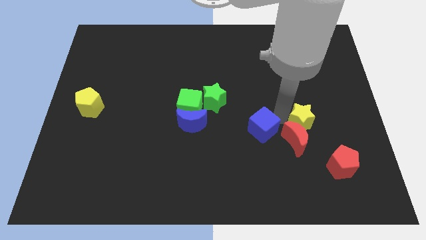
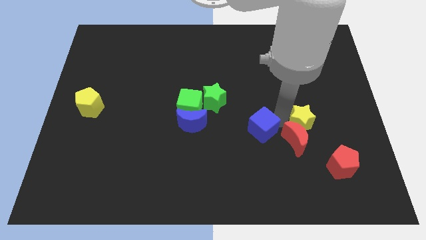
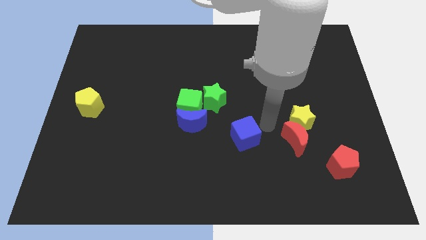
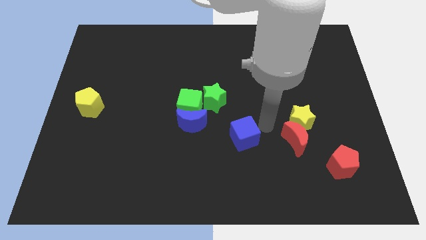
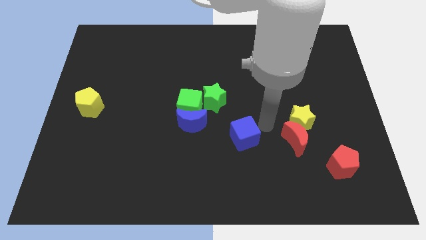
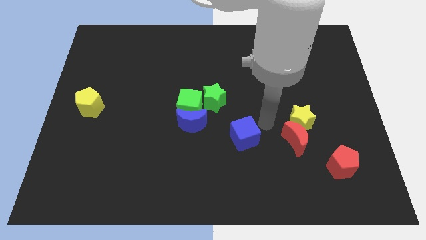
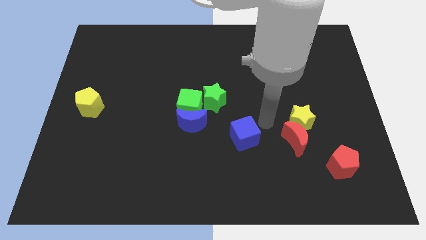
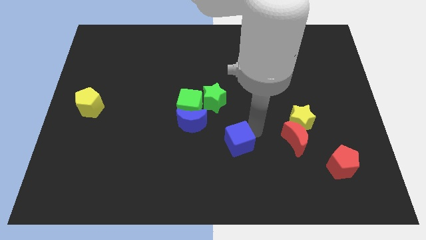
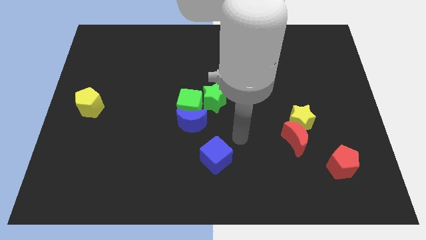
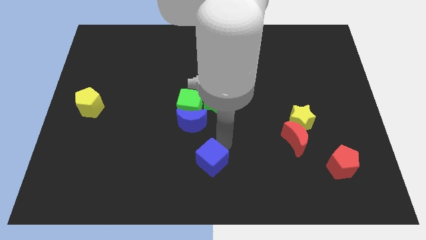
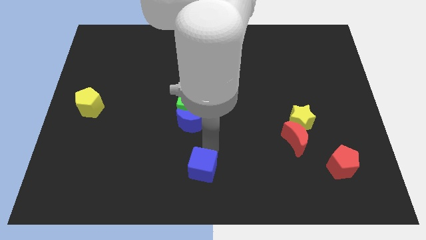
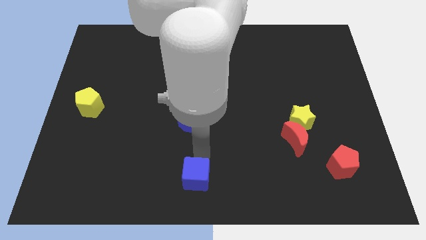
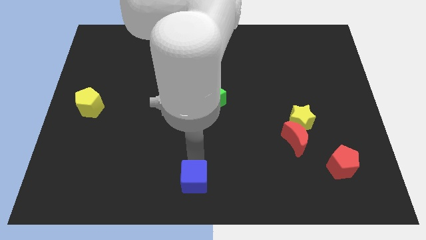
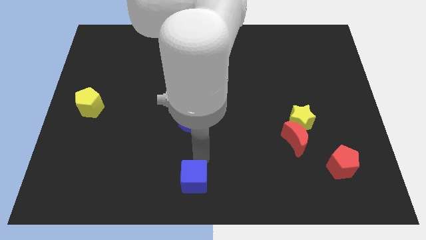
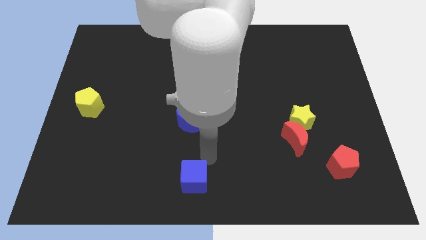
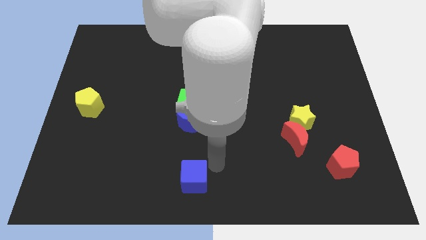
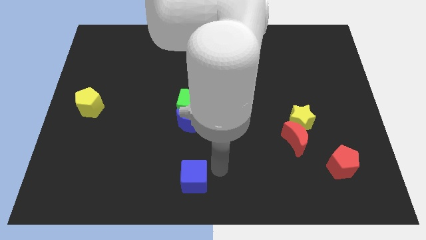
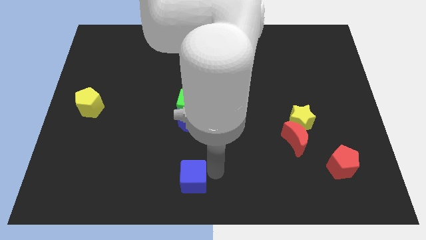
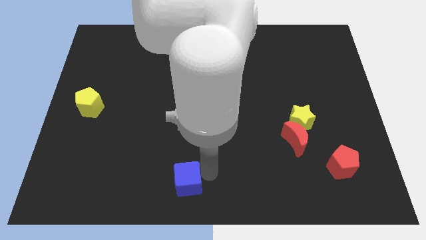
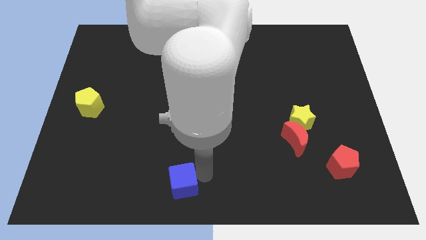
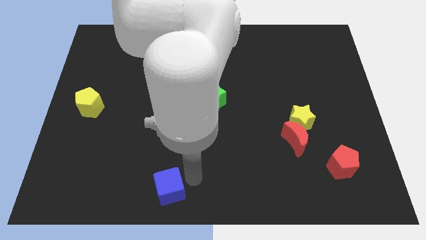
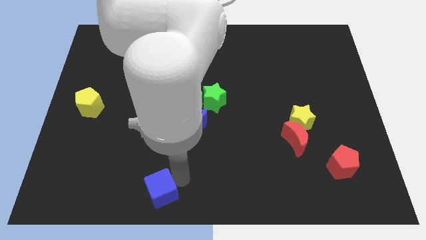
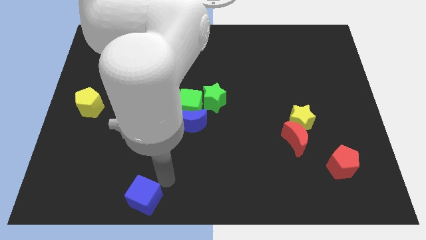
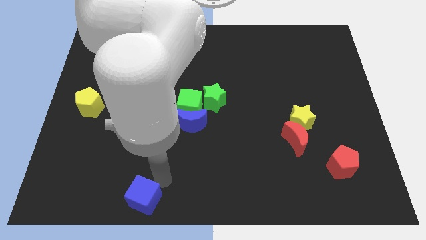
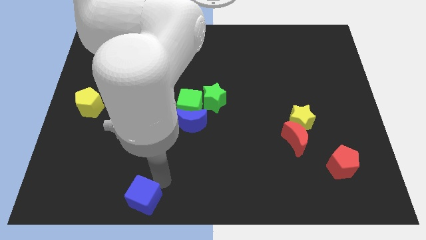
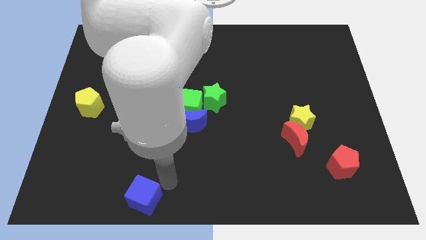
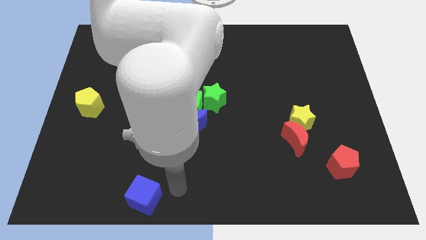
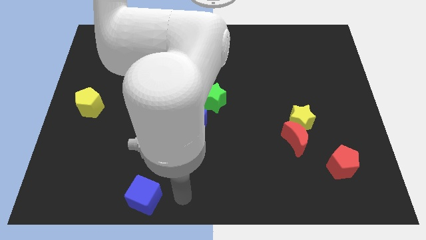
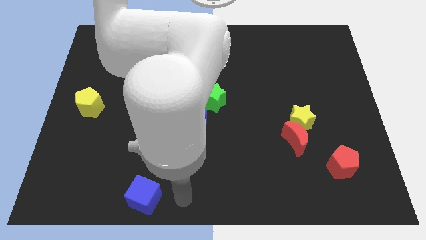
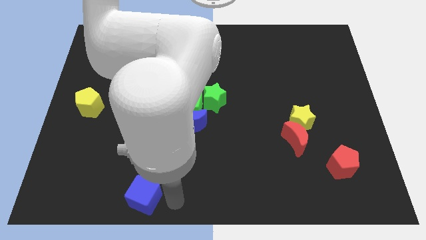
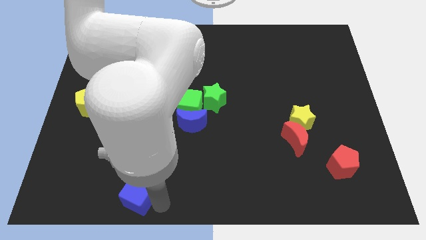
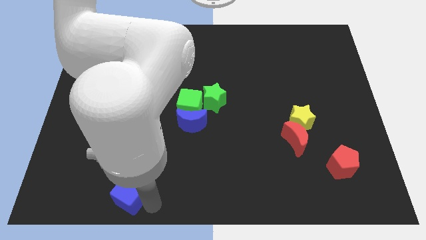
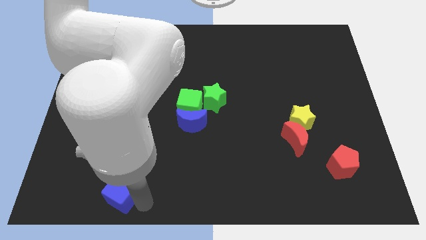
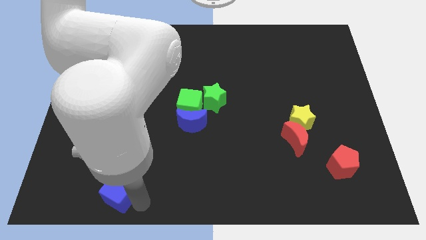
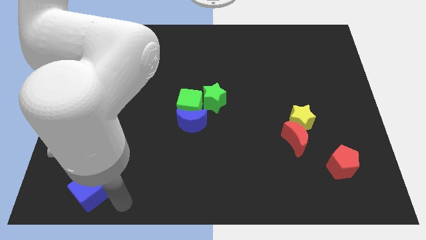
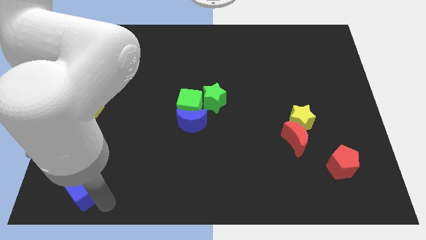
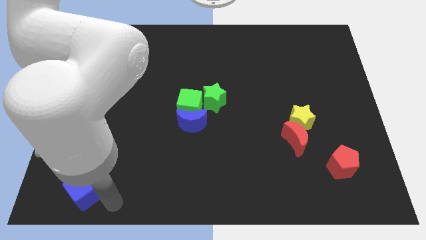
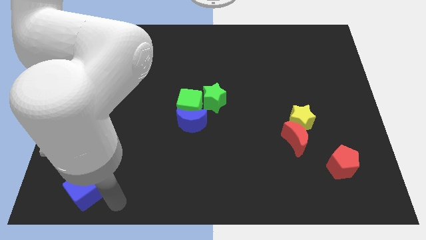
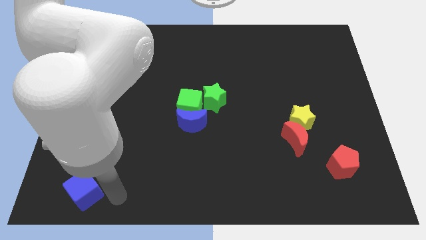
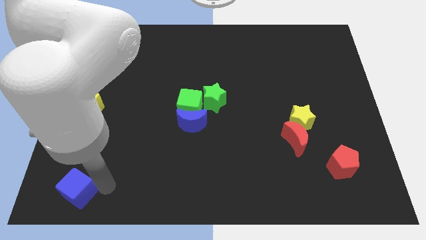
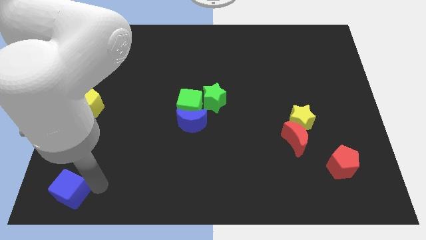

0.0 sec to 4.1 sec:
push blue cube towards bottom left

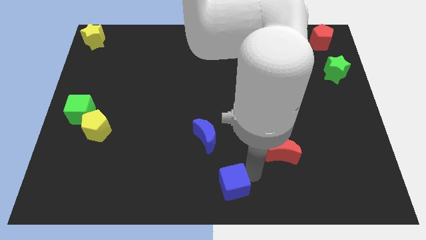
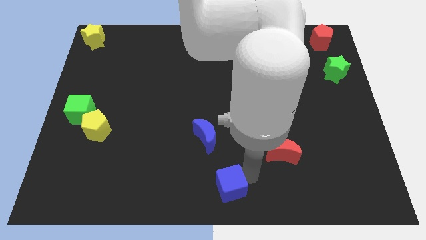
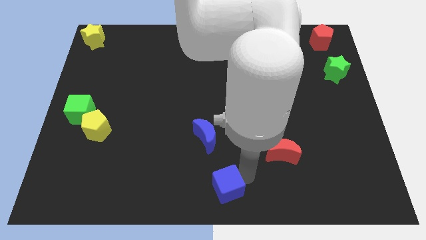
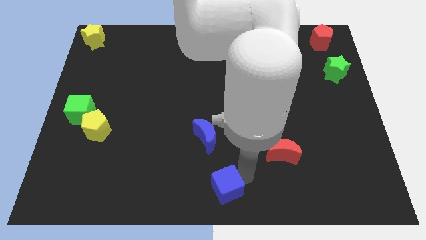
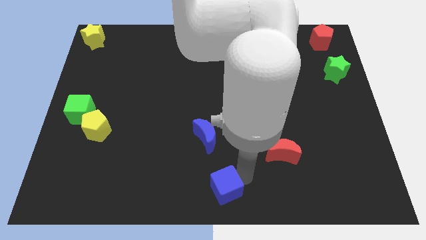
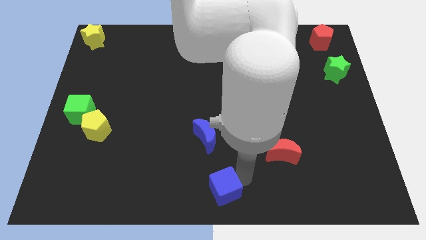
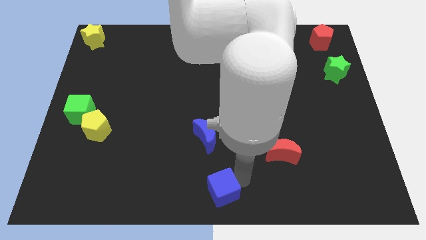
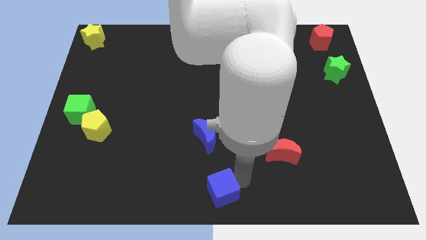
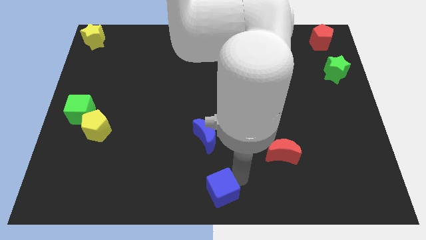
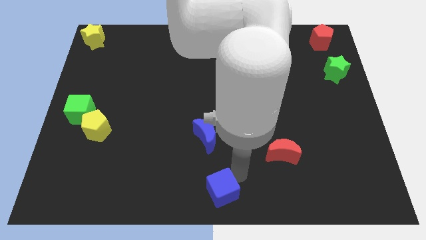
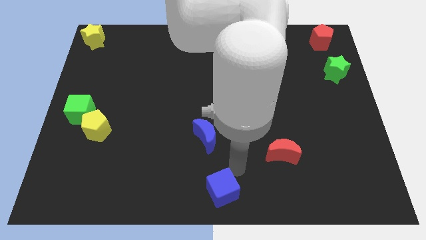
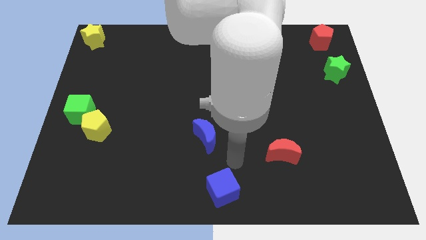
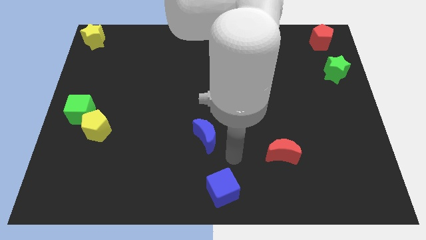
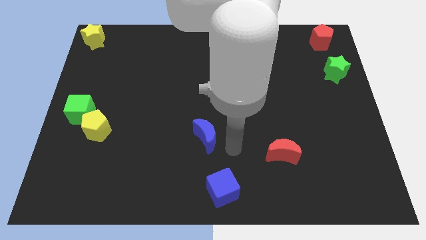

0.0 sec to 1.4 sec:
place the blue cube vertically below the blue crescent

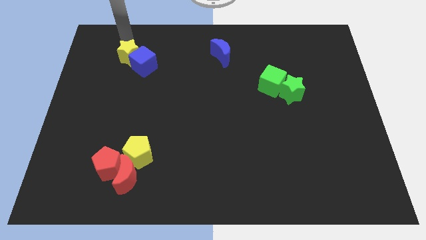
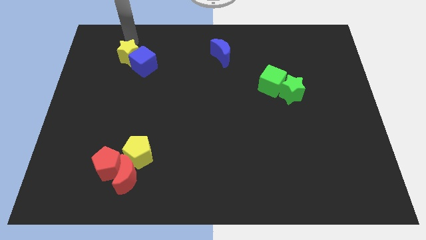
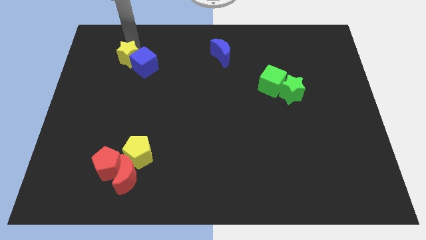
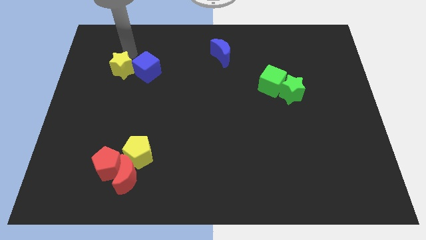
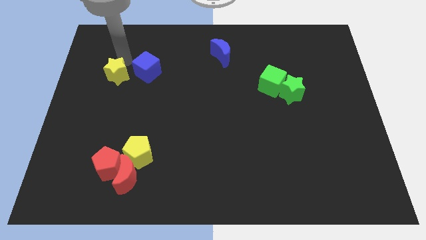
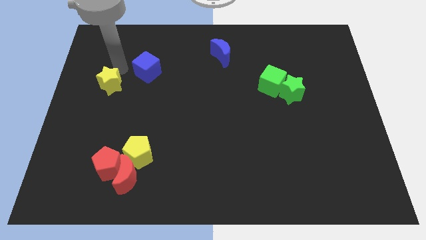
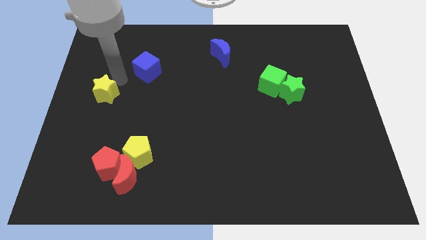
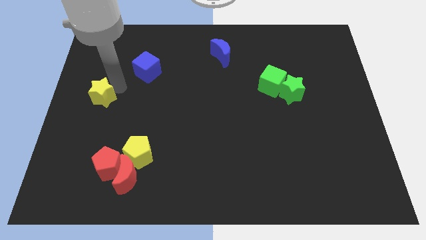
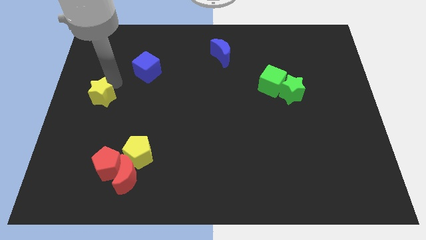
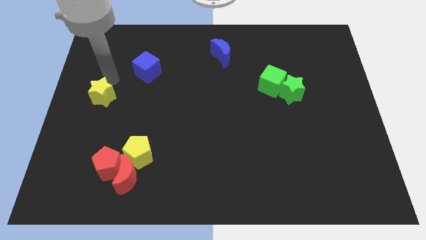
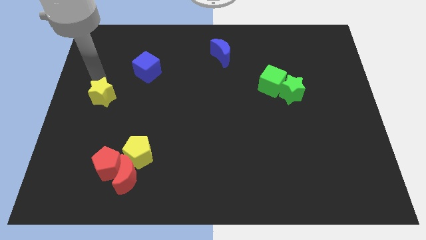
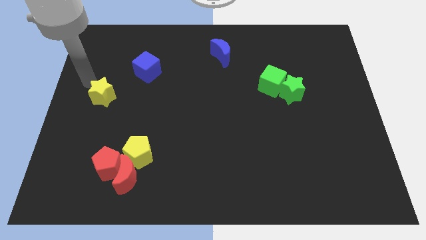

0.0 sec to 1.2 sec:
separate the yellow star from blue cube

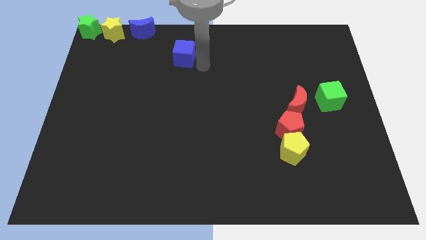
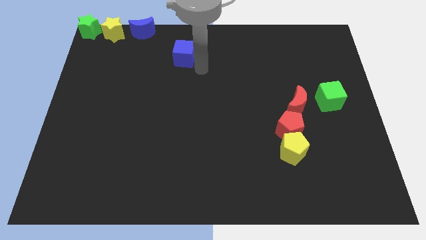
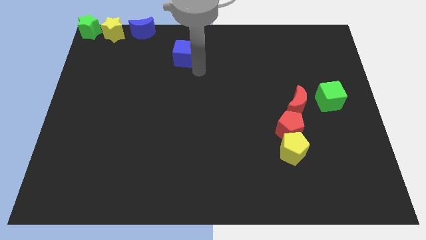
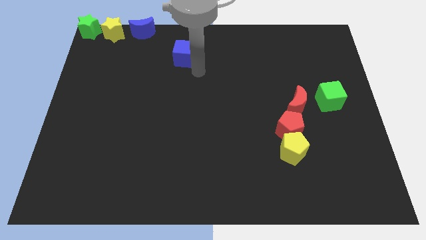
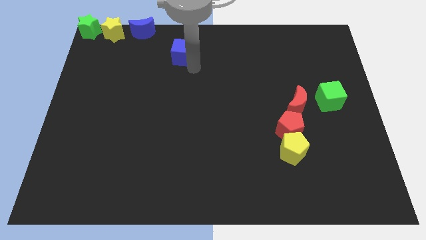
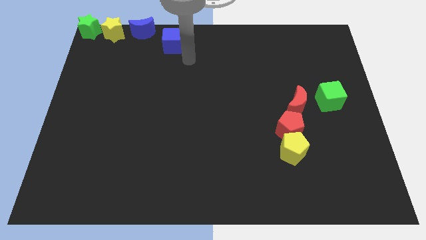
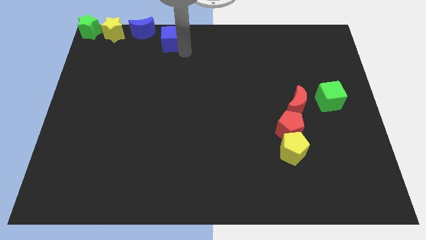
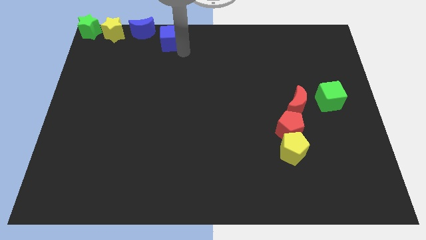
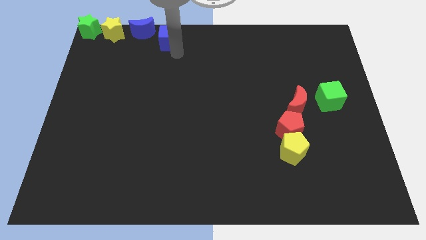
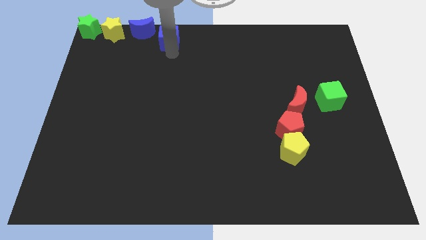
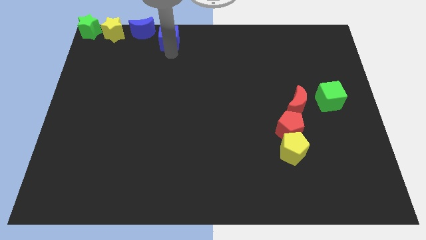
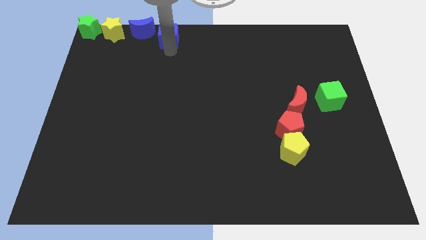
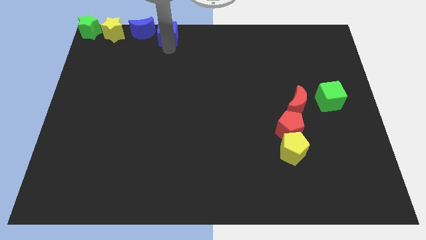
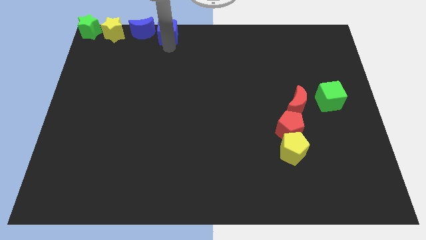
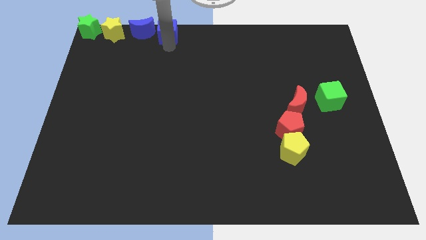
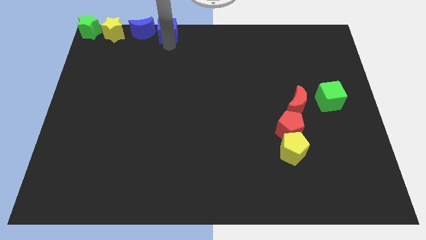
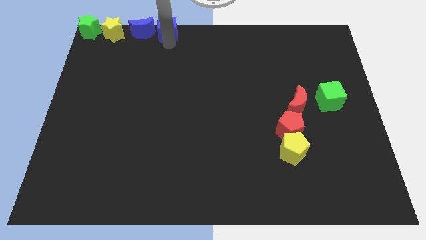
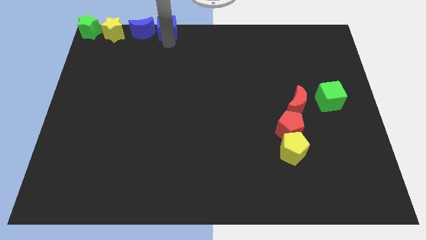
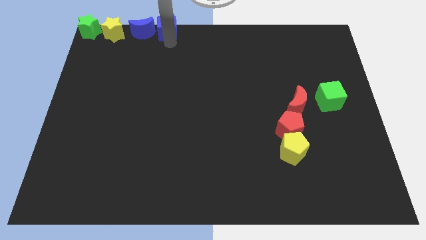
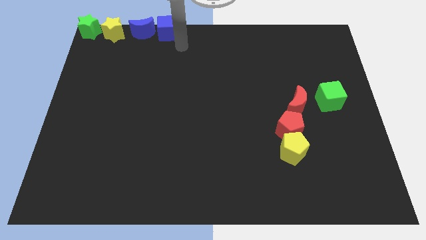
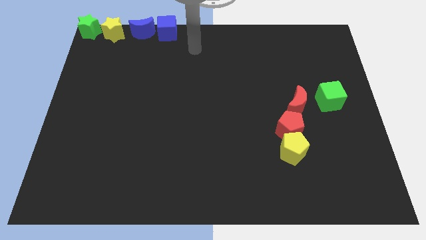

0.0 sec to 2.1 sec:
place the blue cube to the right of the horizontal line of blocks

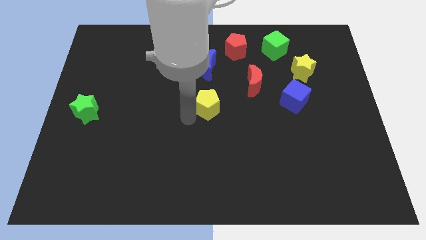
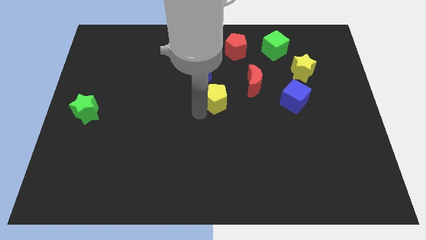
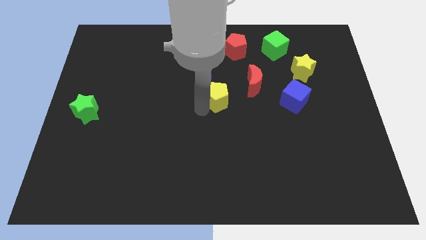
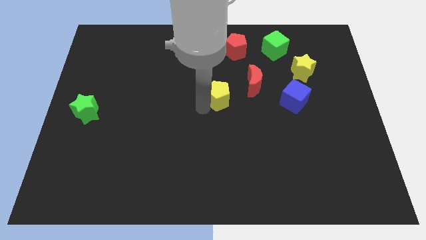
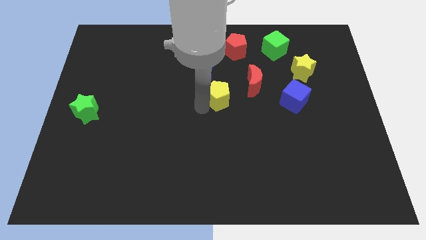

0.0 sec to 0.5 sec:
move the yellow pentagon towards the red moon
